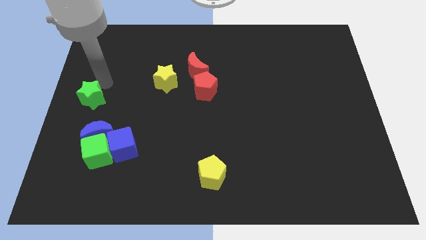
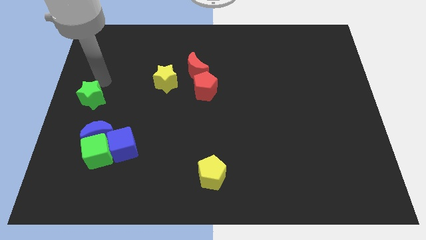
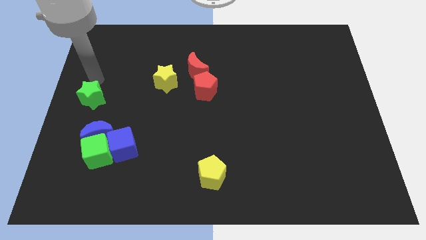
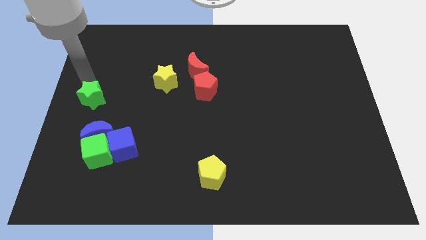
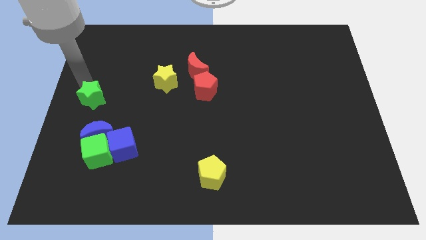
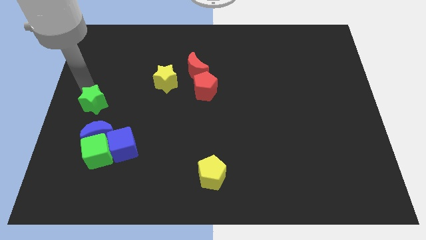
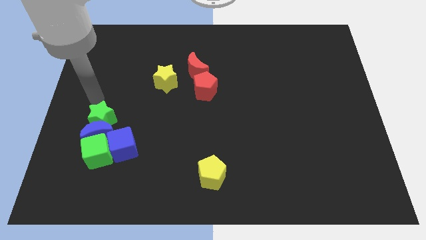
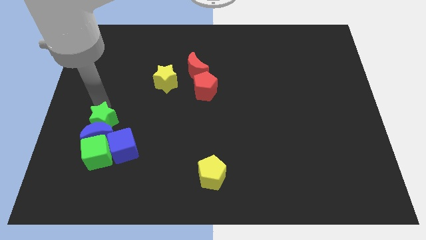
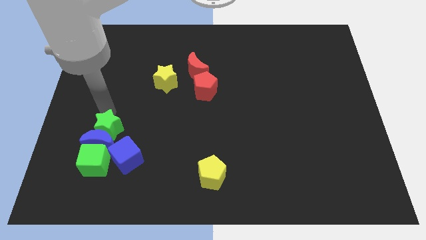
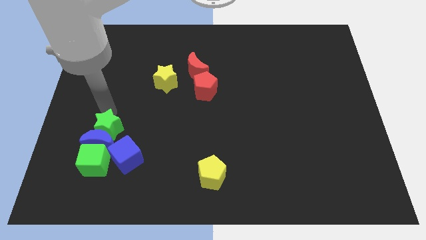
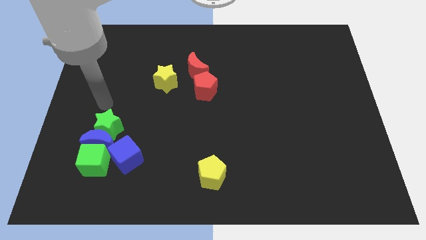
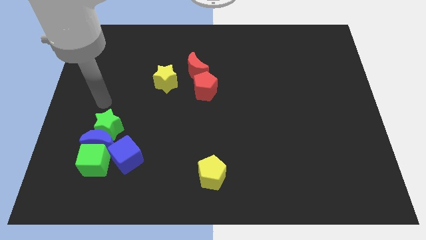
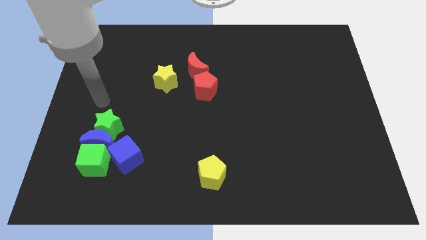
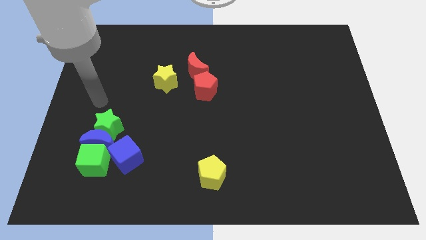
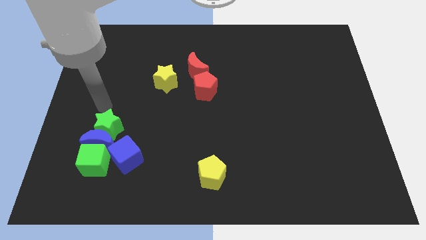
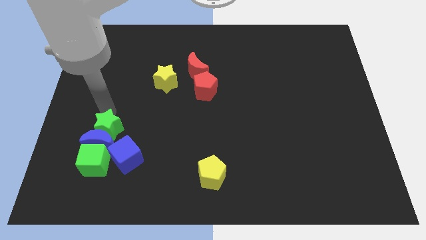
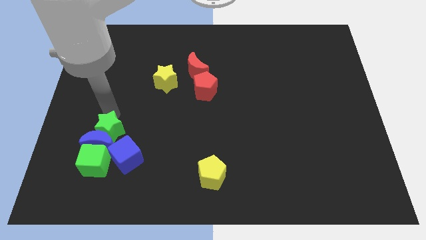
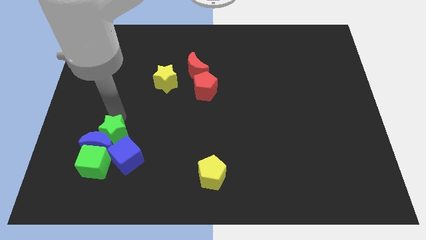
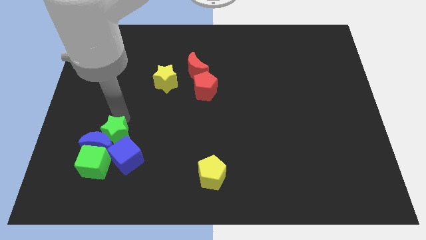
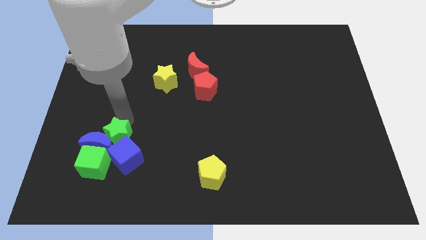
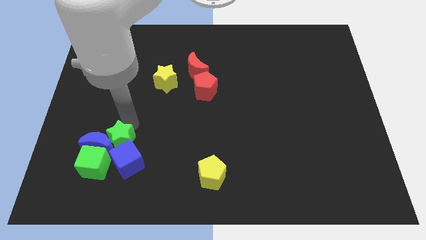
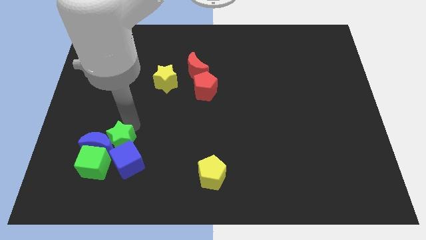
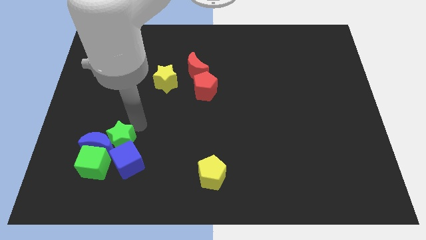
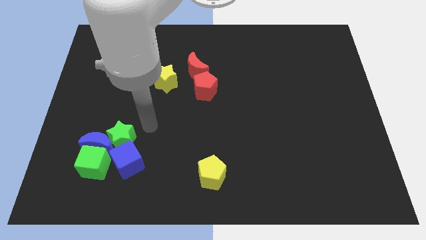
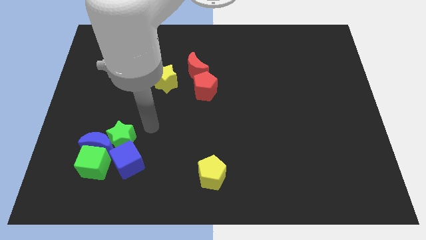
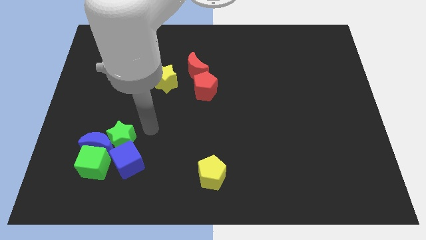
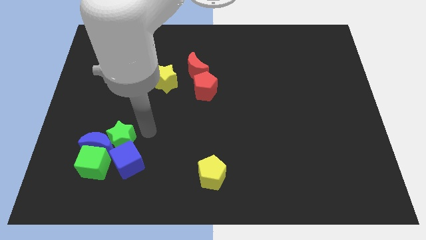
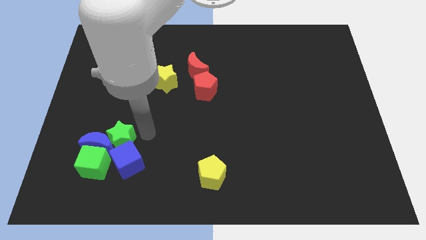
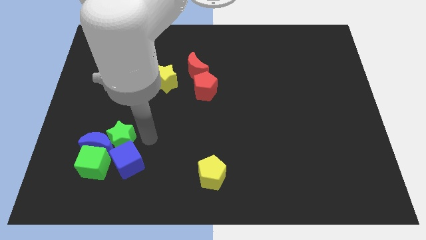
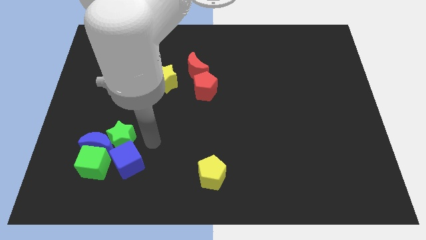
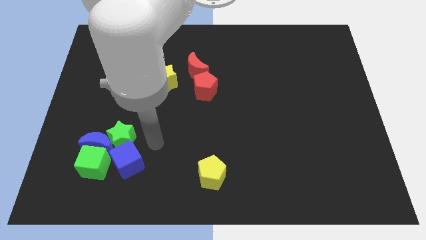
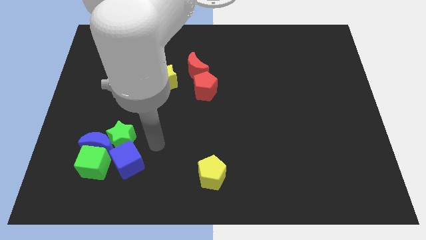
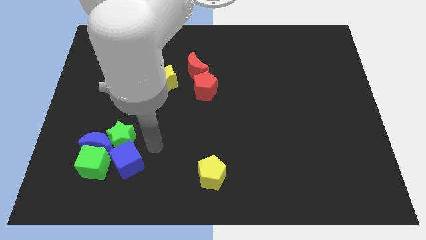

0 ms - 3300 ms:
slide the green star towards the blue cube

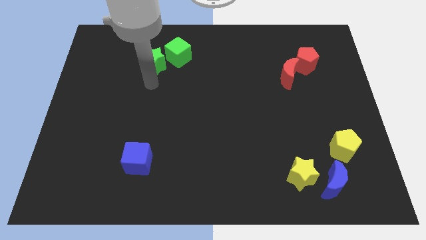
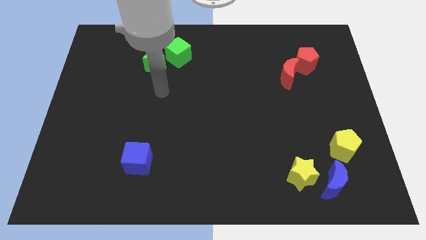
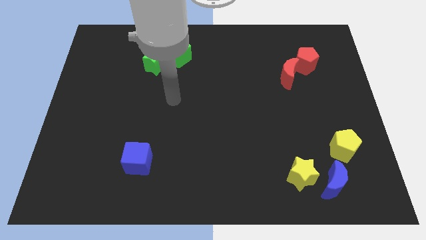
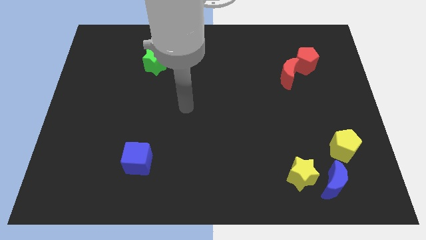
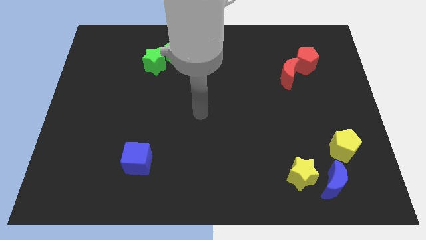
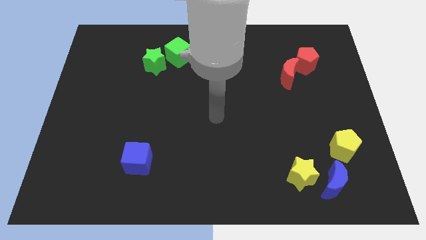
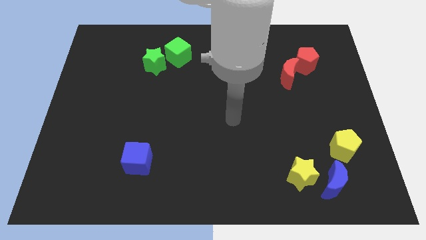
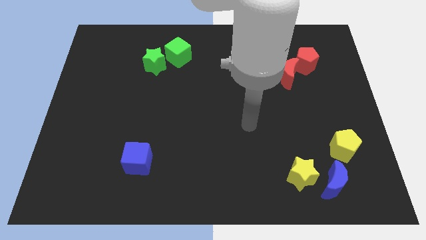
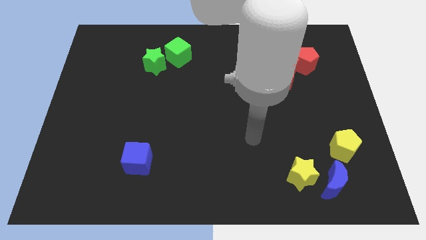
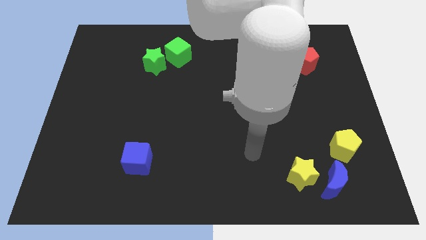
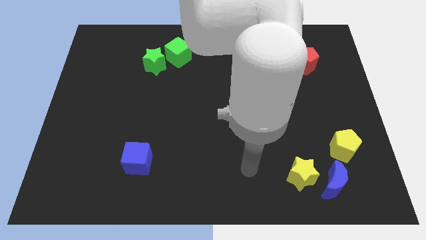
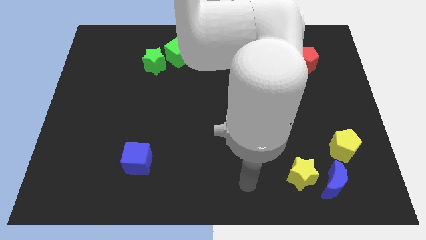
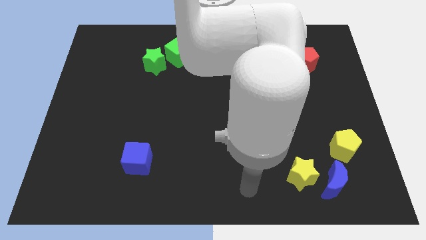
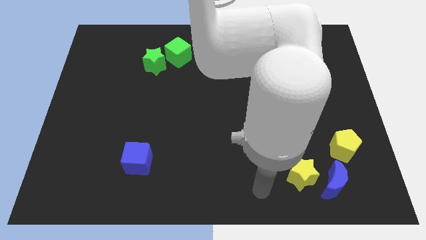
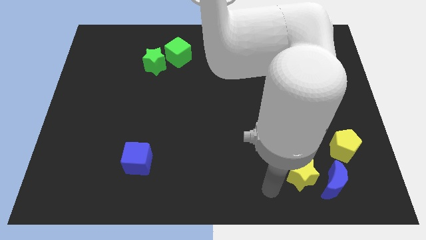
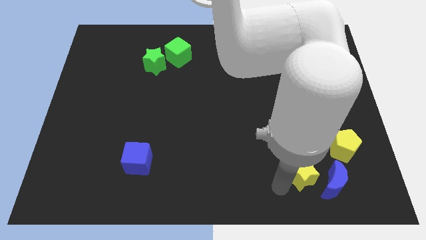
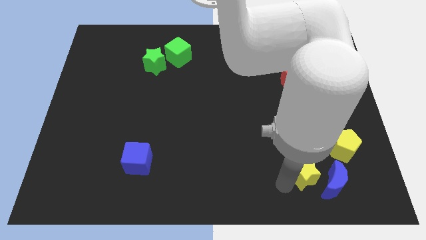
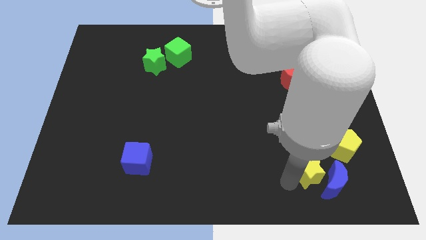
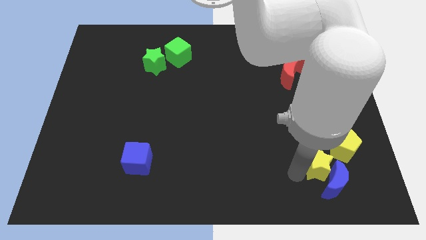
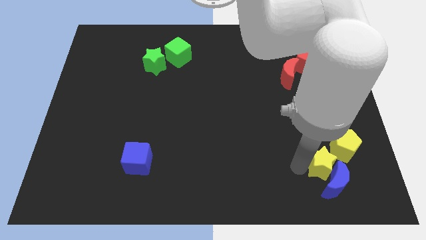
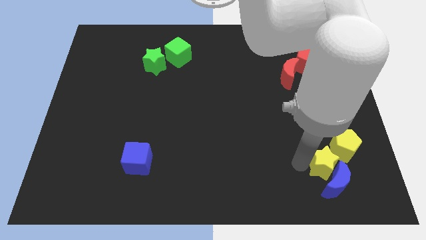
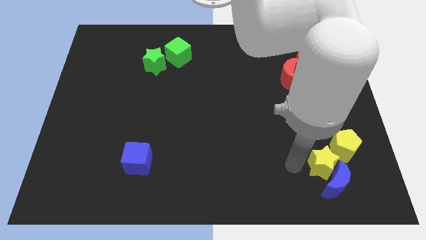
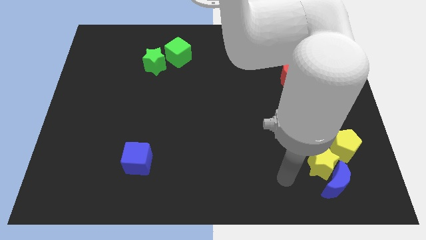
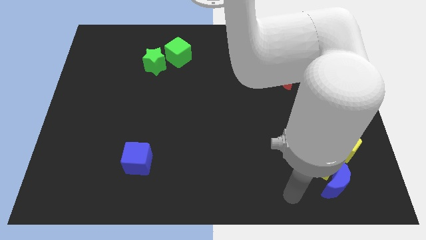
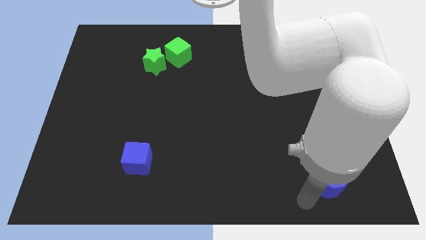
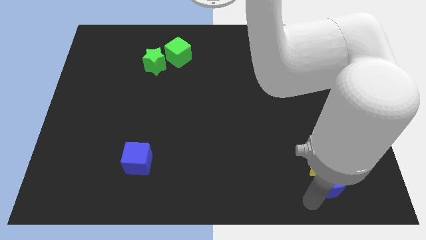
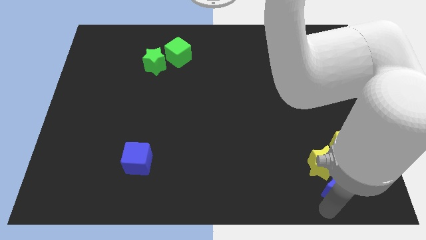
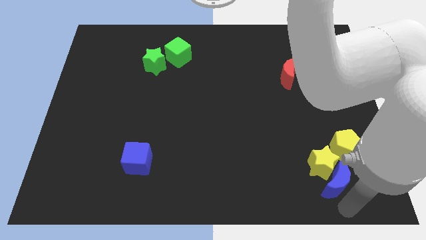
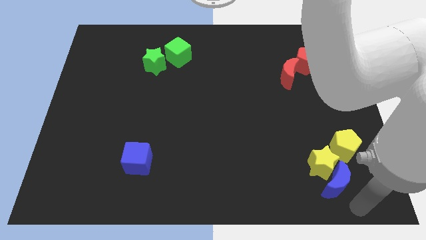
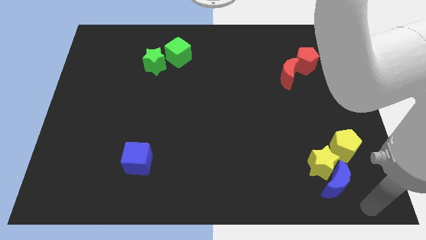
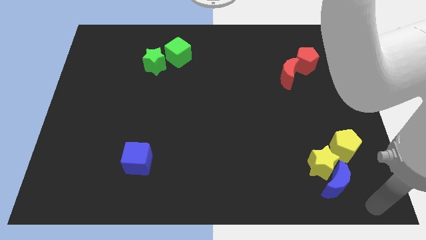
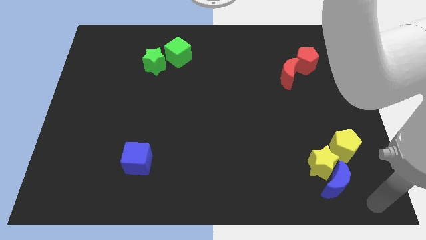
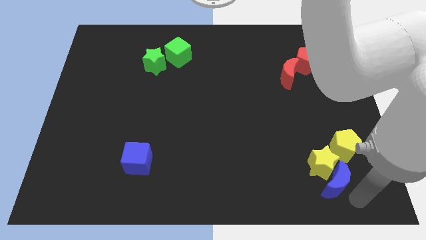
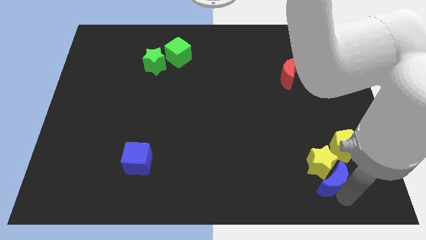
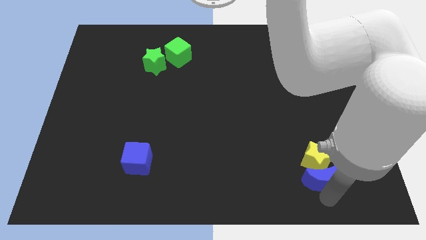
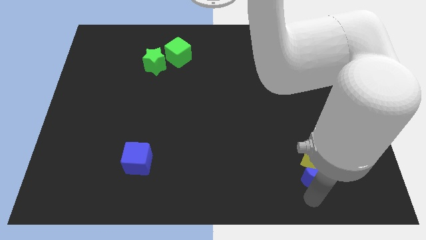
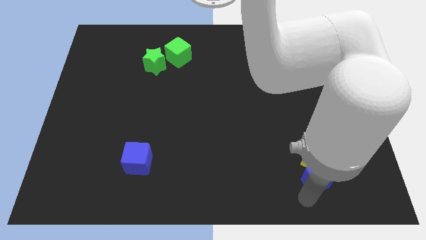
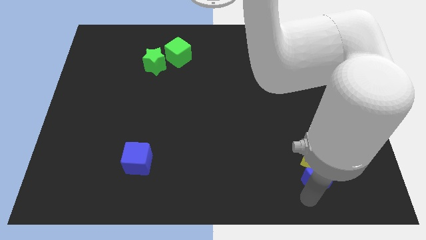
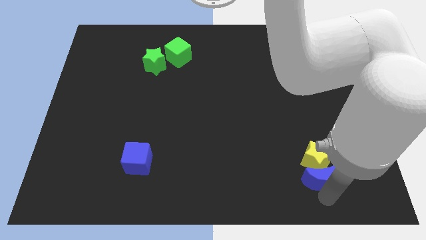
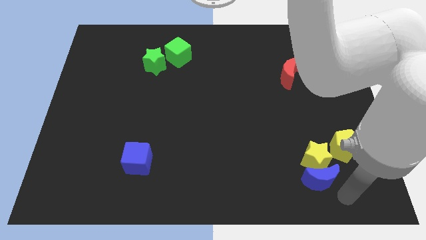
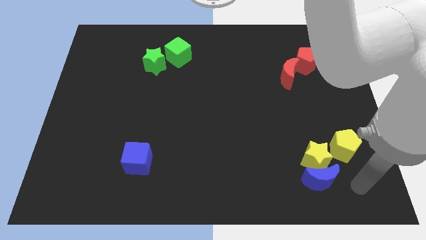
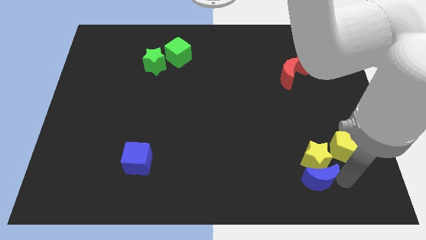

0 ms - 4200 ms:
adjust the blue crescent and yellow blocks at the bottom right of the board

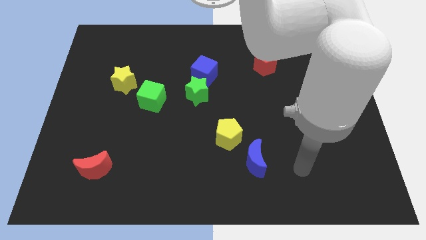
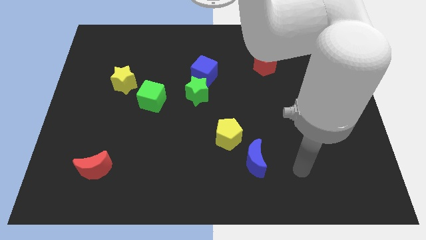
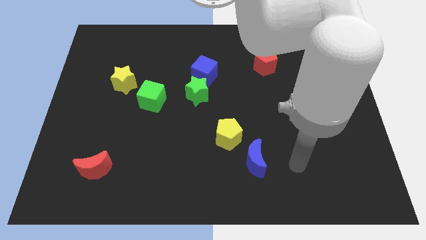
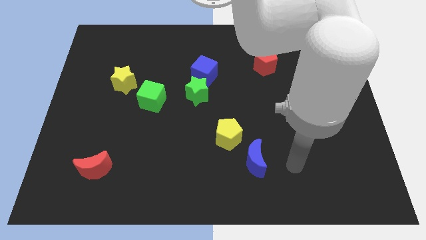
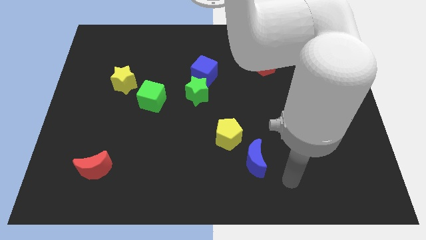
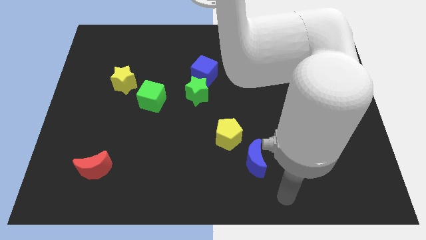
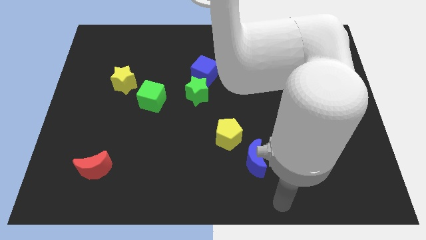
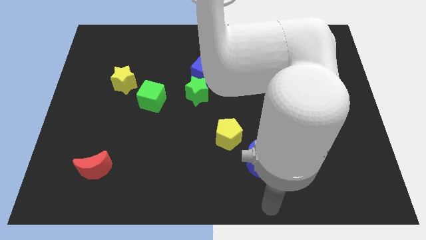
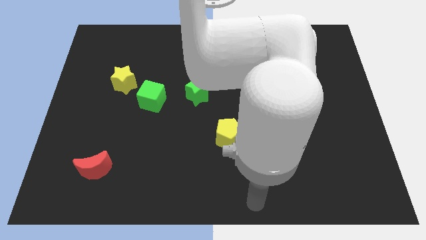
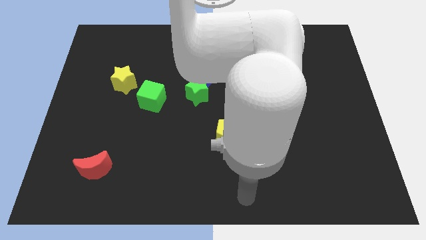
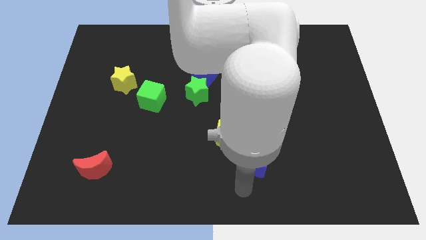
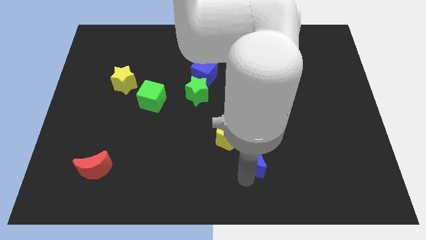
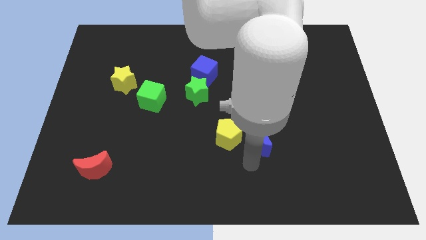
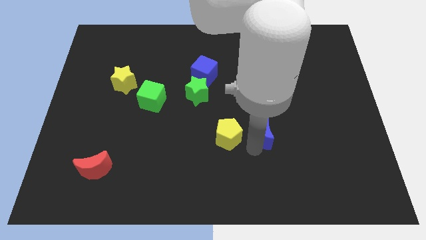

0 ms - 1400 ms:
put the blue moon to the right side of the yellow pentagon

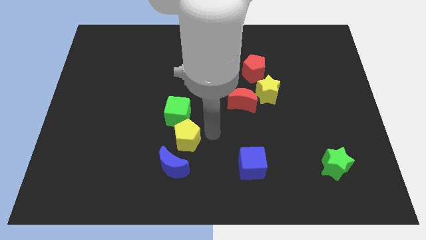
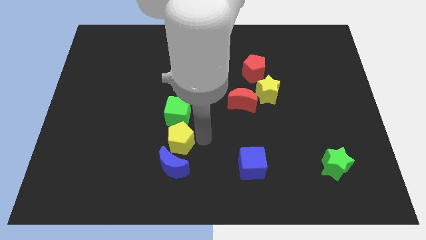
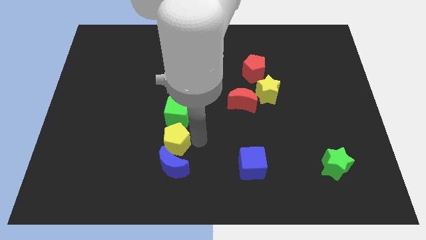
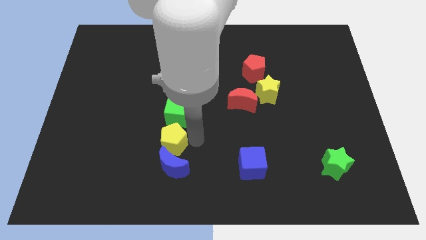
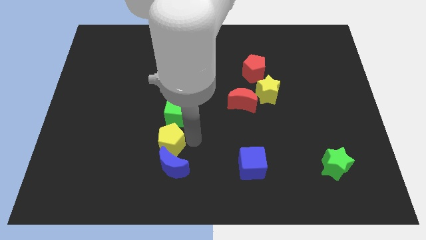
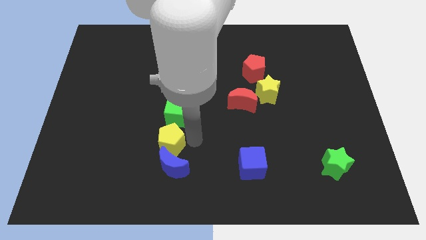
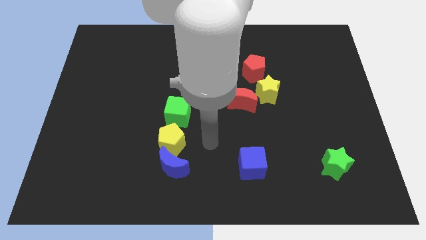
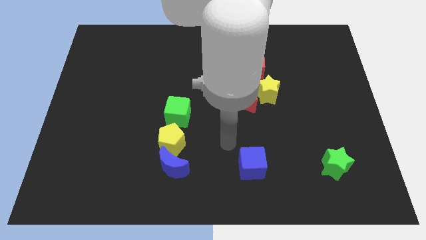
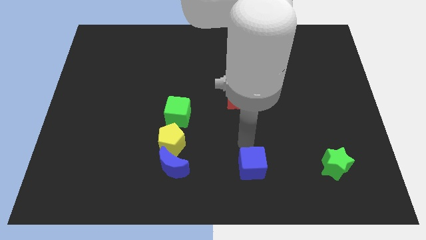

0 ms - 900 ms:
place yellow pentagon closer to the blue crescent
